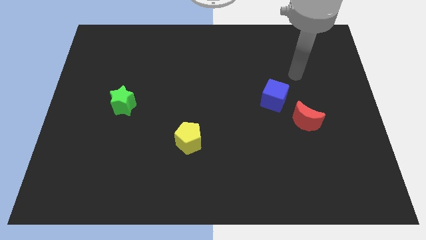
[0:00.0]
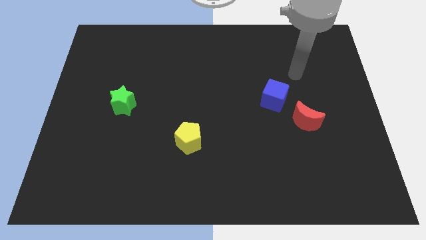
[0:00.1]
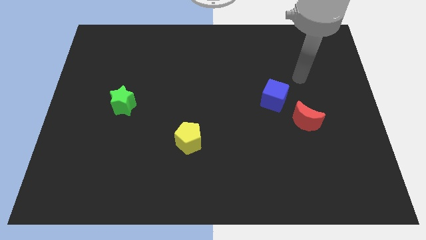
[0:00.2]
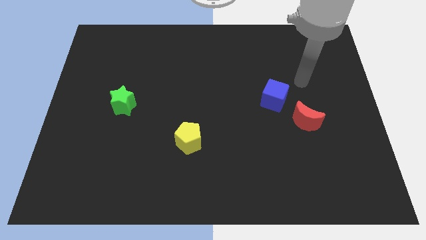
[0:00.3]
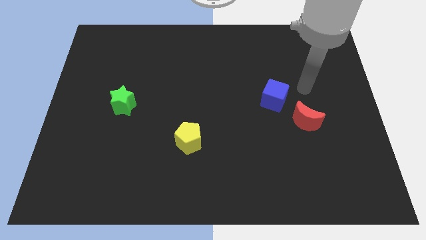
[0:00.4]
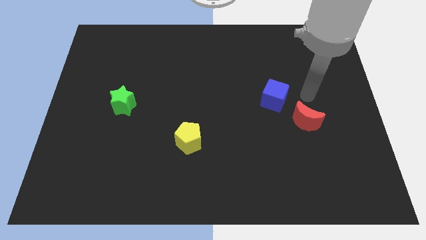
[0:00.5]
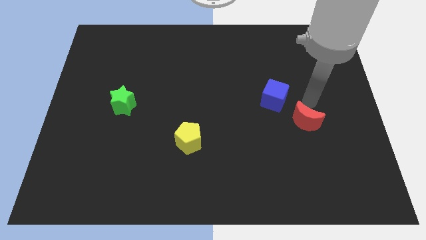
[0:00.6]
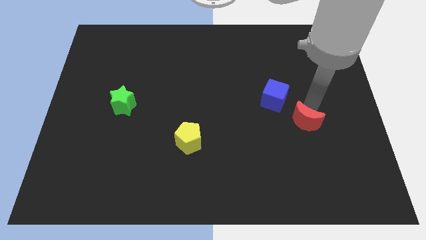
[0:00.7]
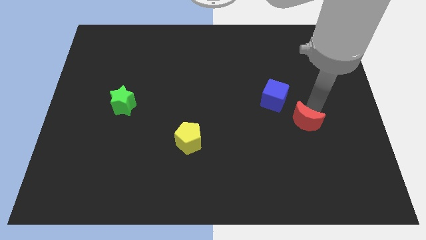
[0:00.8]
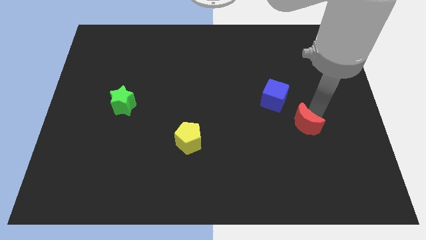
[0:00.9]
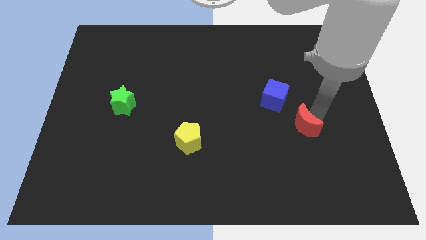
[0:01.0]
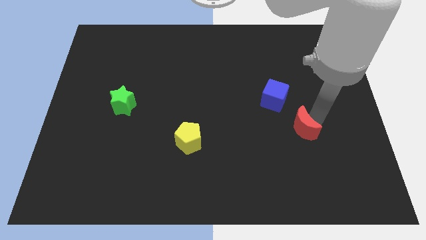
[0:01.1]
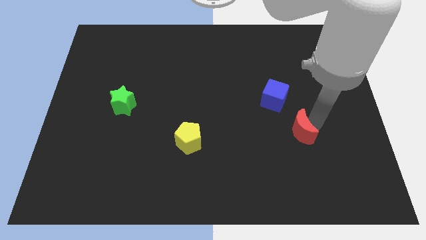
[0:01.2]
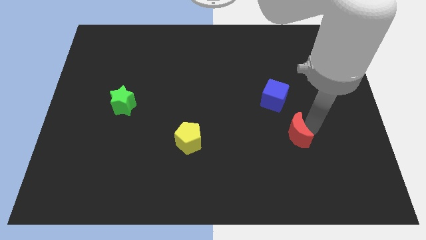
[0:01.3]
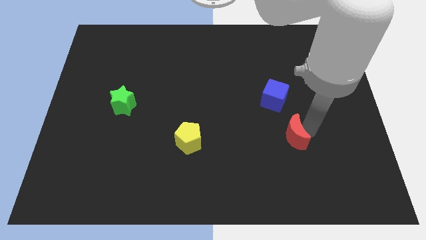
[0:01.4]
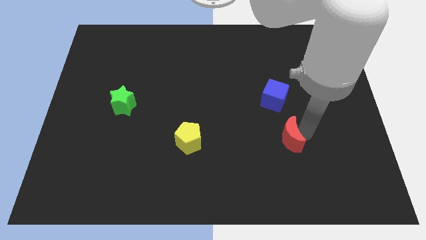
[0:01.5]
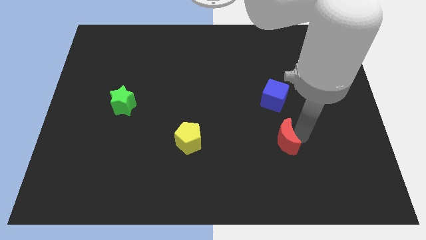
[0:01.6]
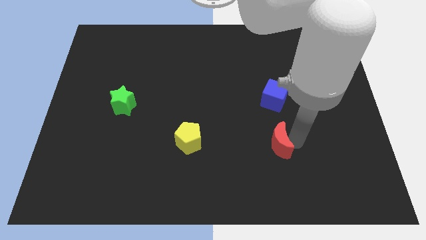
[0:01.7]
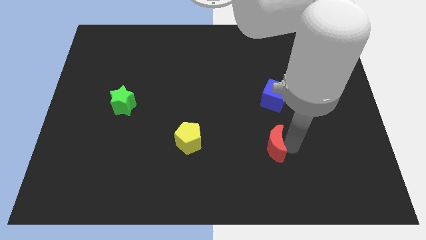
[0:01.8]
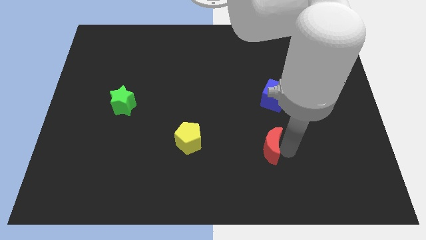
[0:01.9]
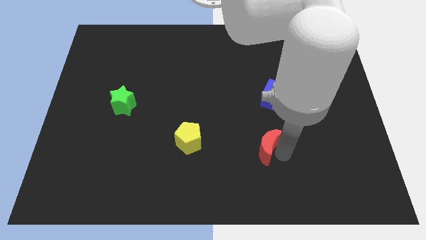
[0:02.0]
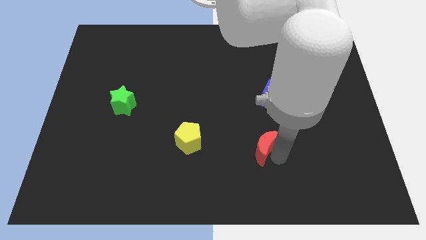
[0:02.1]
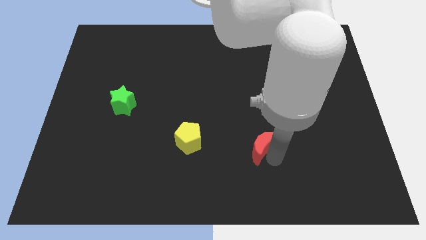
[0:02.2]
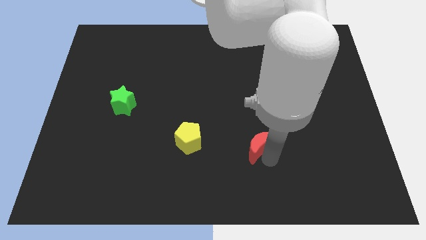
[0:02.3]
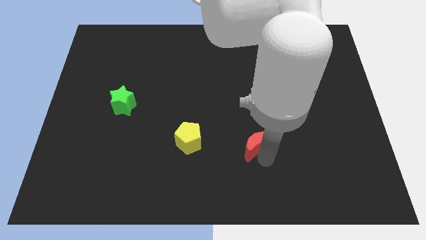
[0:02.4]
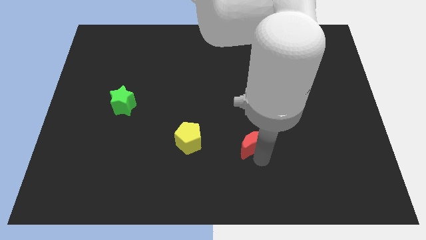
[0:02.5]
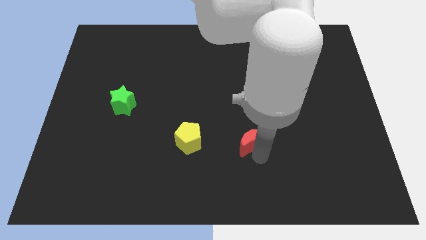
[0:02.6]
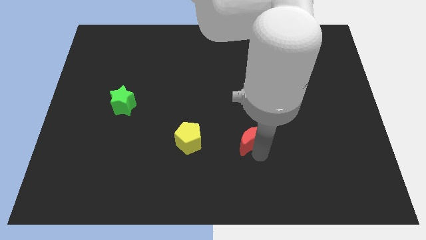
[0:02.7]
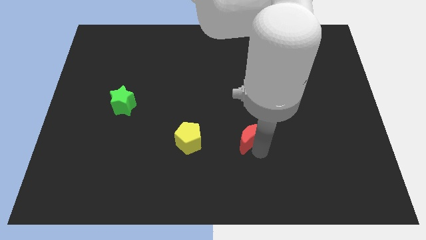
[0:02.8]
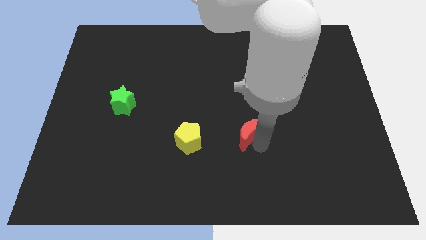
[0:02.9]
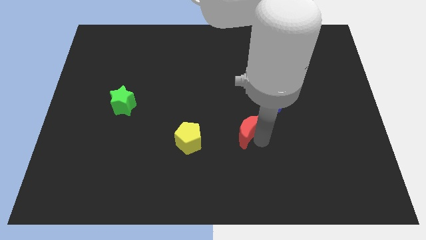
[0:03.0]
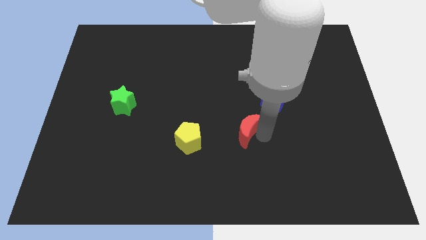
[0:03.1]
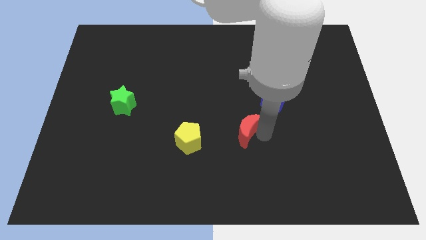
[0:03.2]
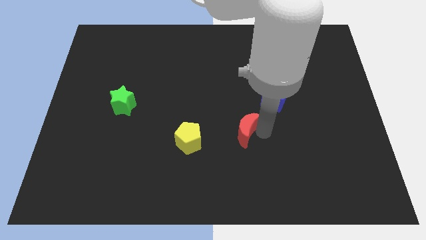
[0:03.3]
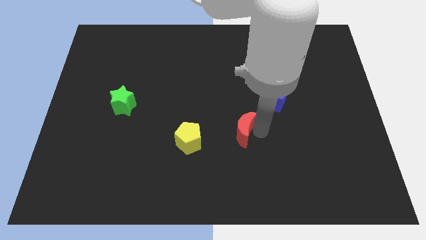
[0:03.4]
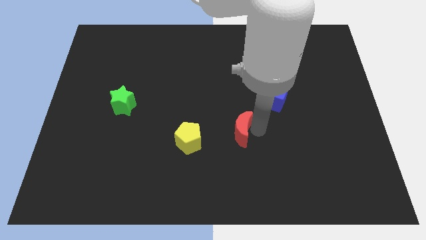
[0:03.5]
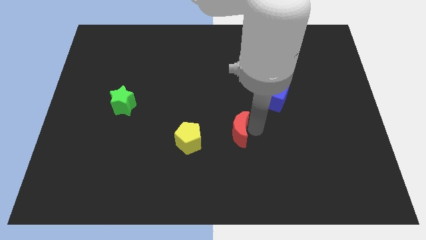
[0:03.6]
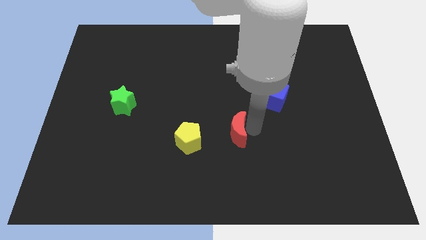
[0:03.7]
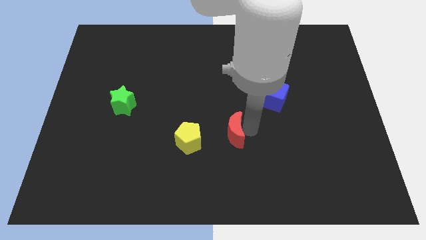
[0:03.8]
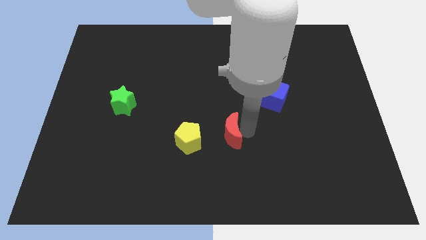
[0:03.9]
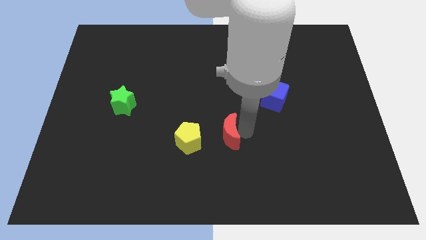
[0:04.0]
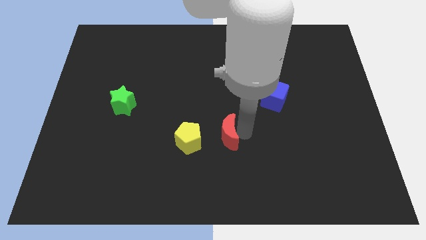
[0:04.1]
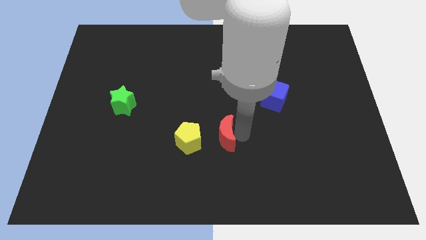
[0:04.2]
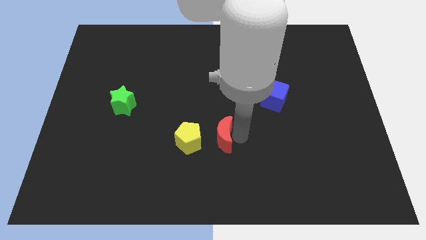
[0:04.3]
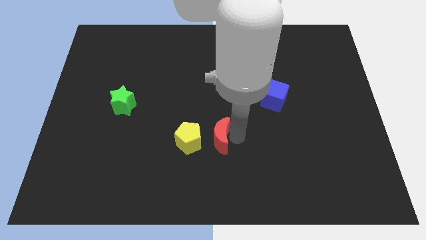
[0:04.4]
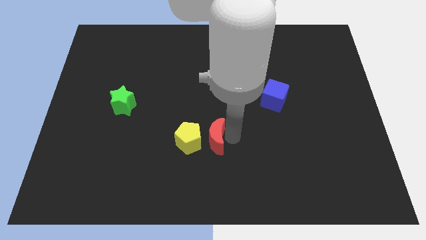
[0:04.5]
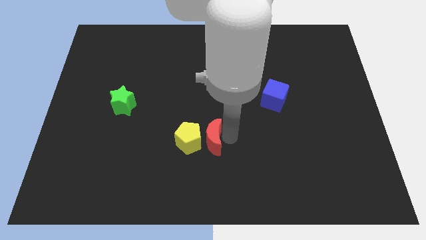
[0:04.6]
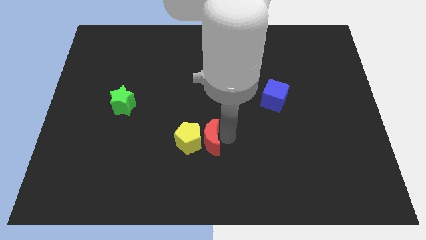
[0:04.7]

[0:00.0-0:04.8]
move the red moon to the yellow pentagon

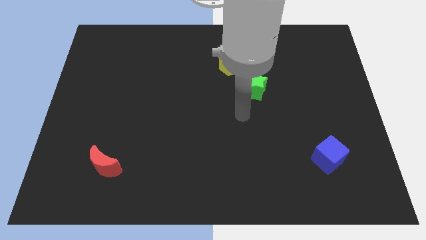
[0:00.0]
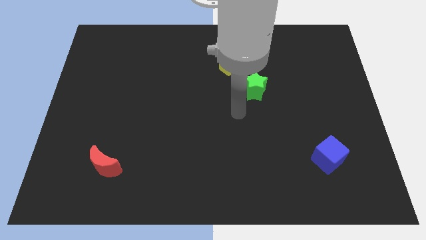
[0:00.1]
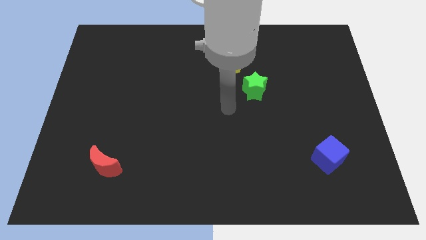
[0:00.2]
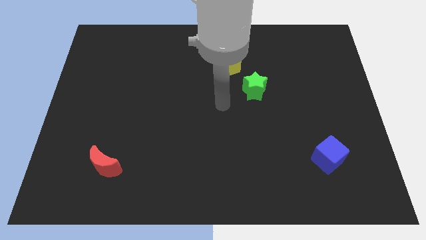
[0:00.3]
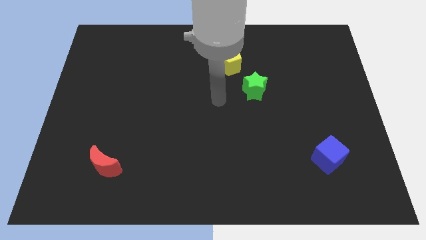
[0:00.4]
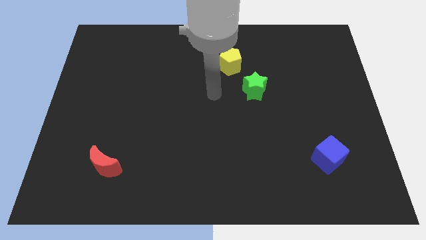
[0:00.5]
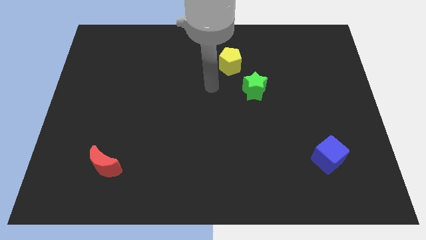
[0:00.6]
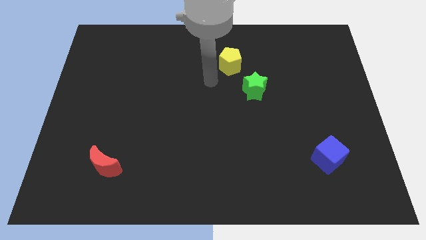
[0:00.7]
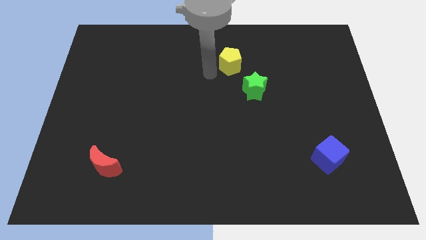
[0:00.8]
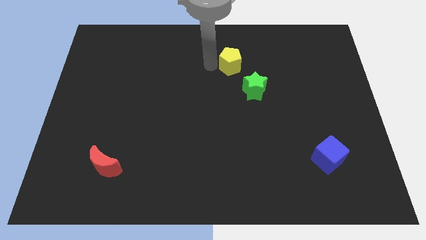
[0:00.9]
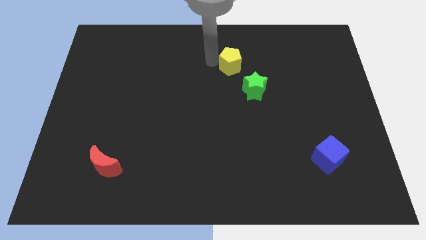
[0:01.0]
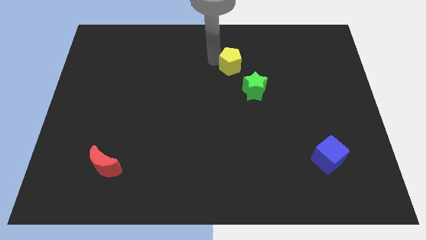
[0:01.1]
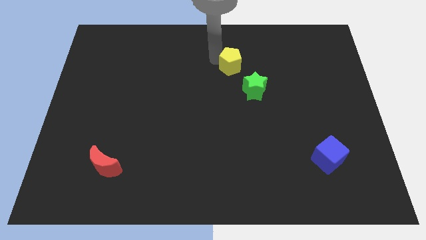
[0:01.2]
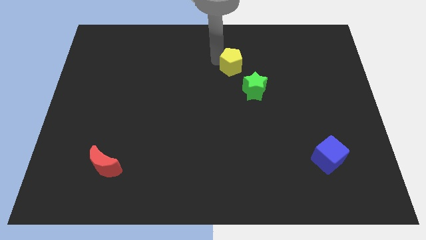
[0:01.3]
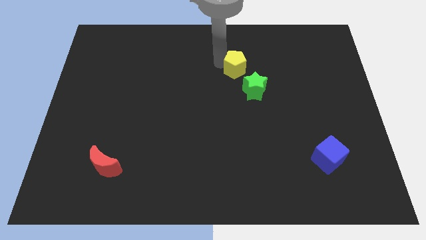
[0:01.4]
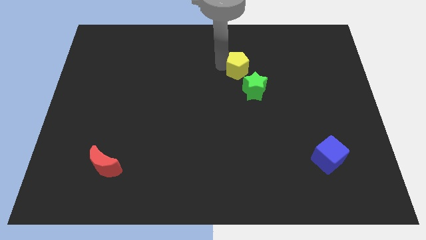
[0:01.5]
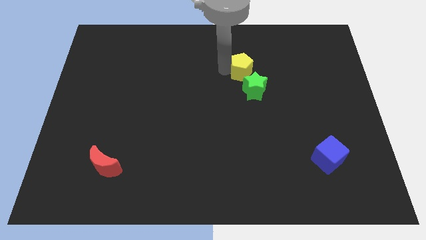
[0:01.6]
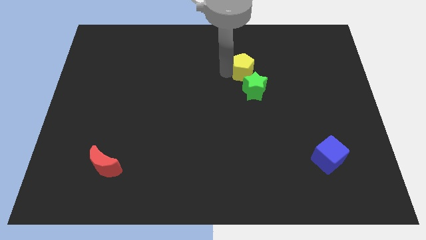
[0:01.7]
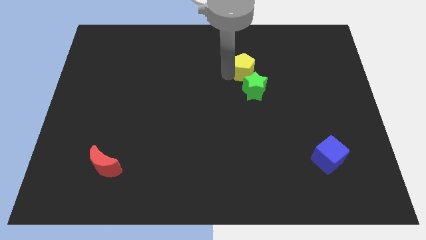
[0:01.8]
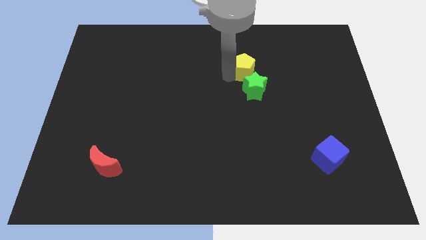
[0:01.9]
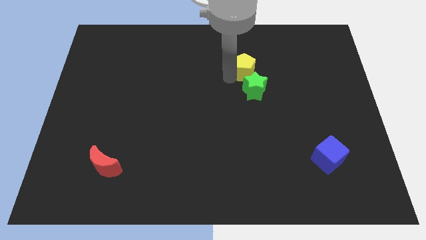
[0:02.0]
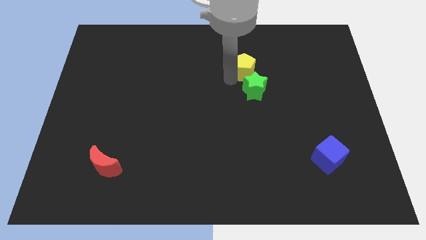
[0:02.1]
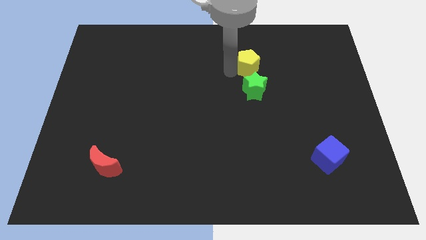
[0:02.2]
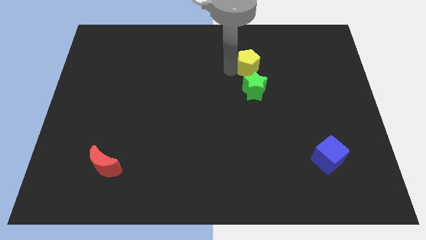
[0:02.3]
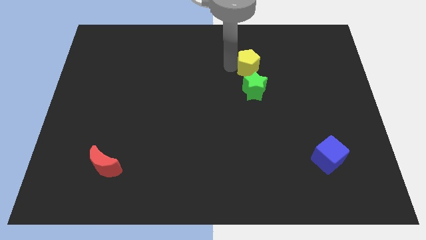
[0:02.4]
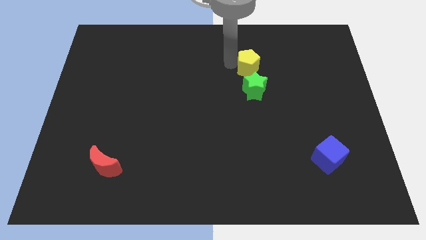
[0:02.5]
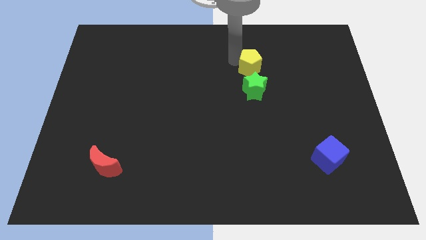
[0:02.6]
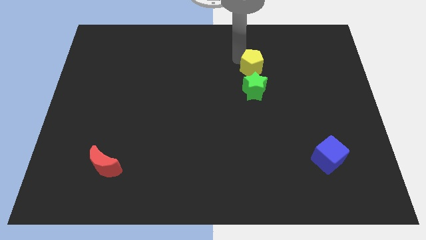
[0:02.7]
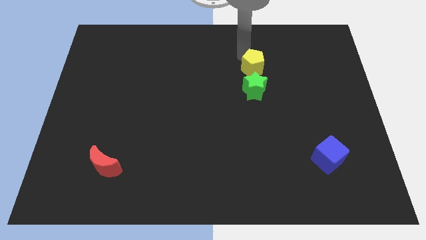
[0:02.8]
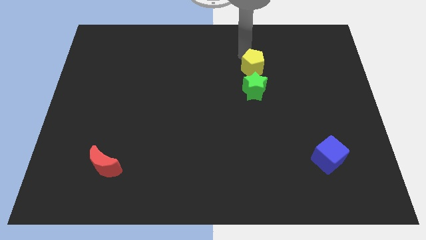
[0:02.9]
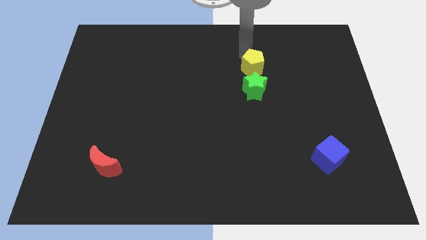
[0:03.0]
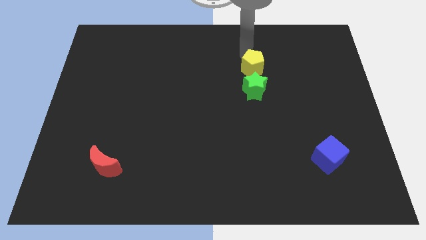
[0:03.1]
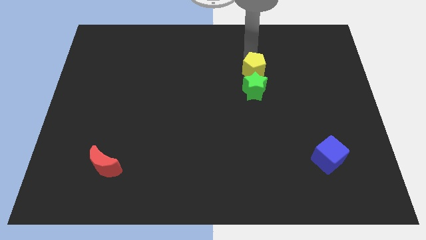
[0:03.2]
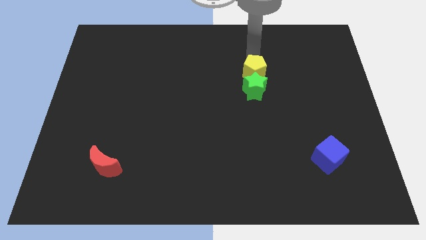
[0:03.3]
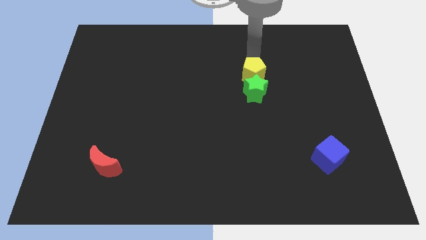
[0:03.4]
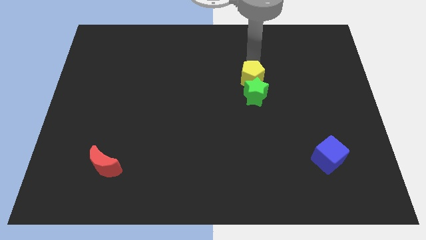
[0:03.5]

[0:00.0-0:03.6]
put the pentagon next to the green star

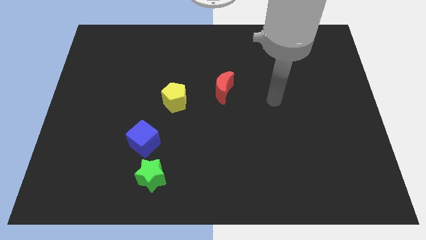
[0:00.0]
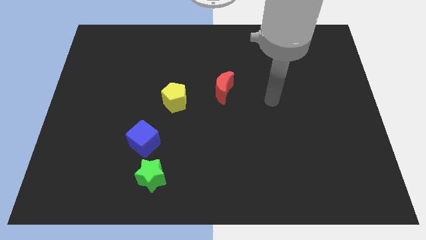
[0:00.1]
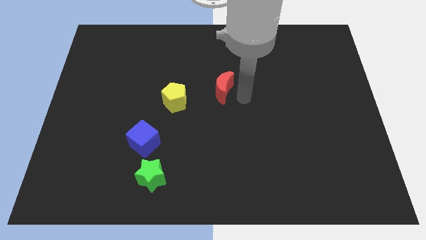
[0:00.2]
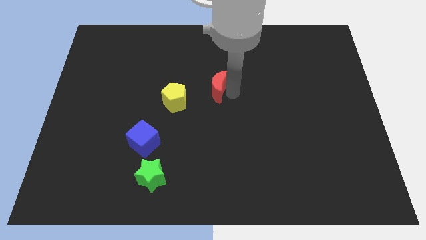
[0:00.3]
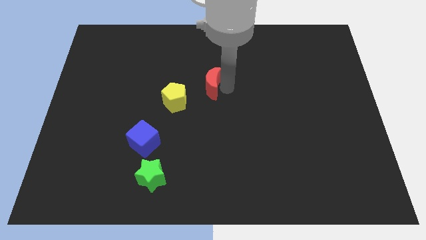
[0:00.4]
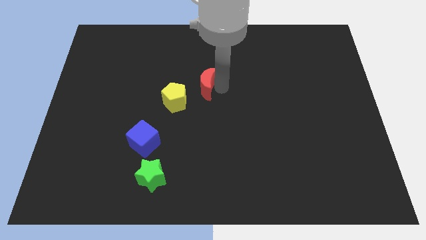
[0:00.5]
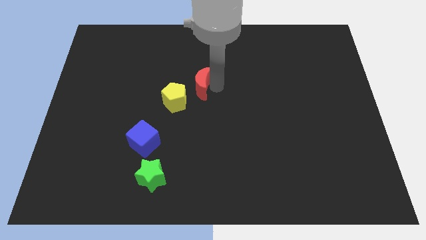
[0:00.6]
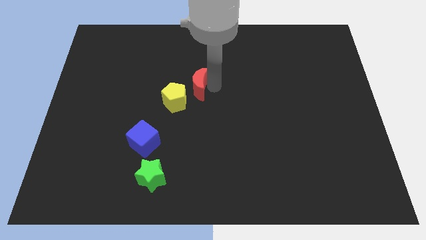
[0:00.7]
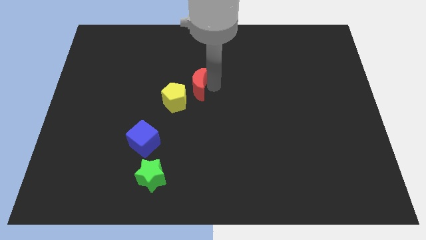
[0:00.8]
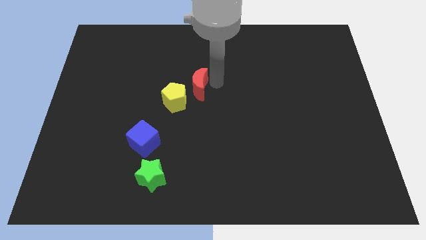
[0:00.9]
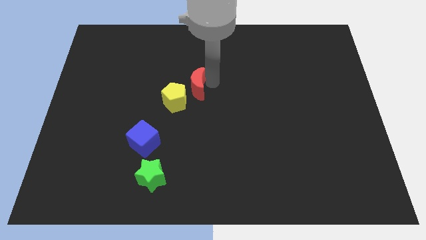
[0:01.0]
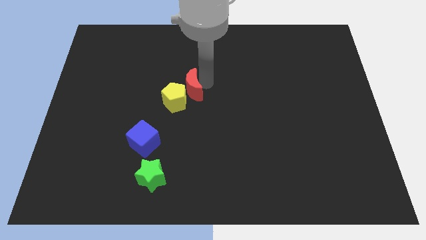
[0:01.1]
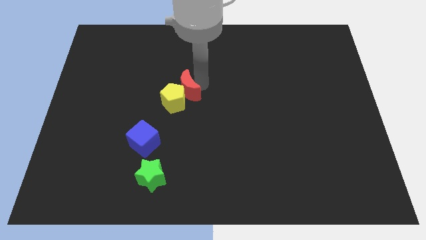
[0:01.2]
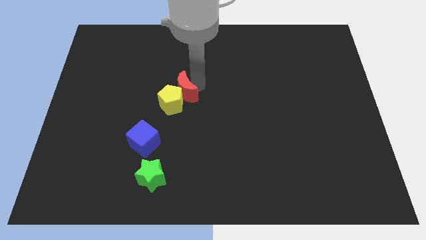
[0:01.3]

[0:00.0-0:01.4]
push the red block next to the pentagon
